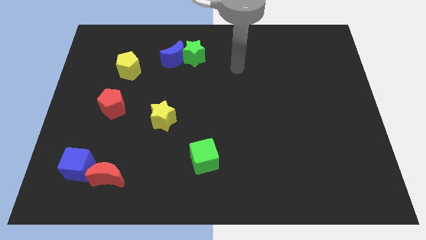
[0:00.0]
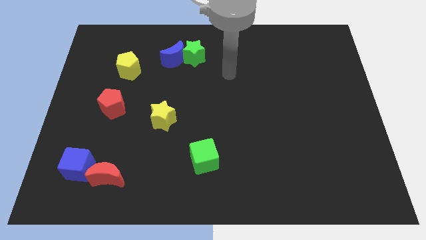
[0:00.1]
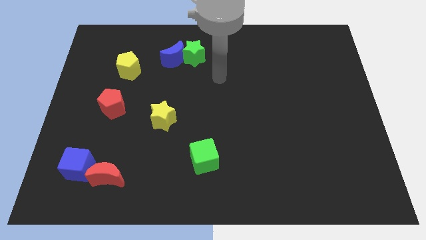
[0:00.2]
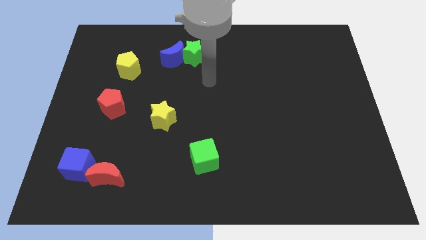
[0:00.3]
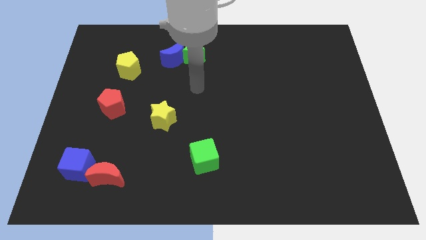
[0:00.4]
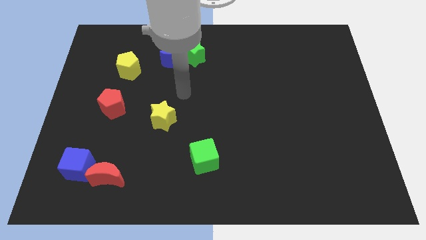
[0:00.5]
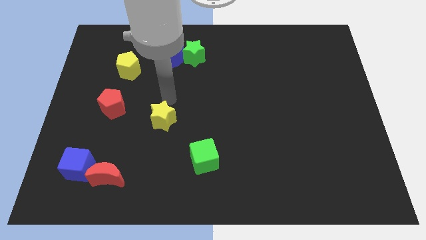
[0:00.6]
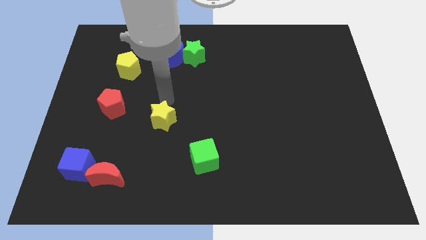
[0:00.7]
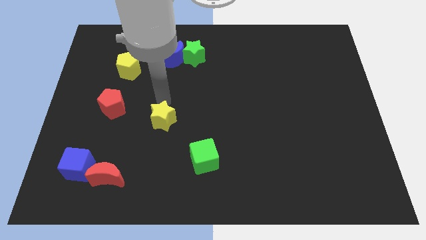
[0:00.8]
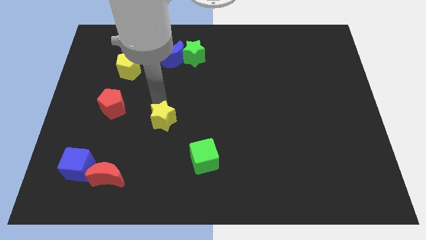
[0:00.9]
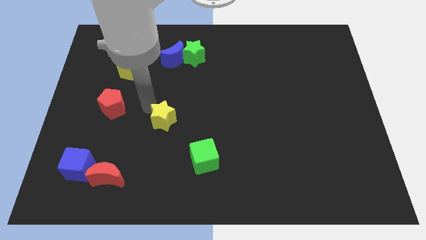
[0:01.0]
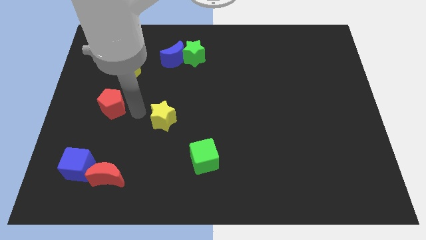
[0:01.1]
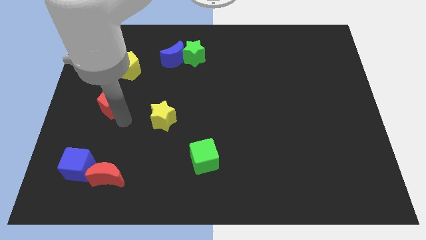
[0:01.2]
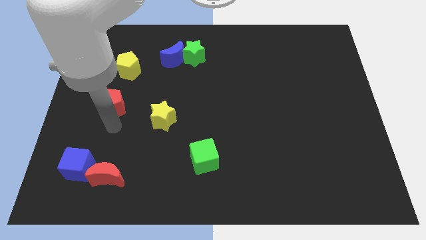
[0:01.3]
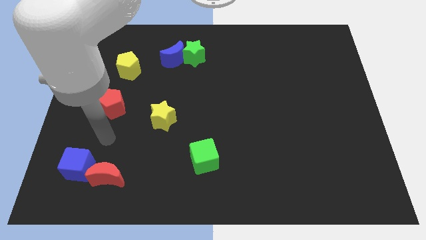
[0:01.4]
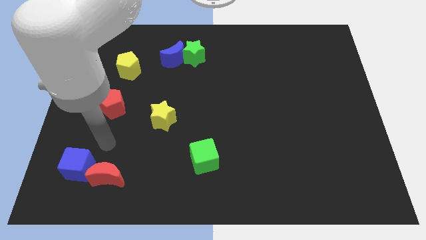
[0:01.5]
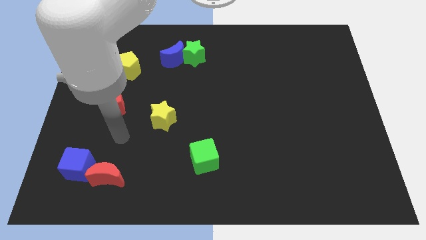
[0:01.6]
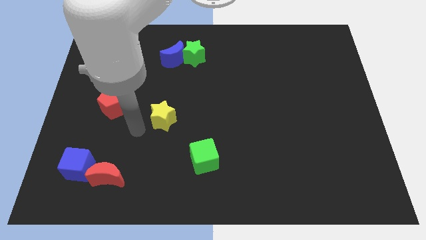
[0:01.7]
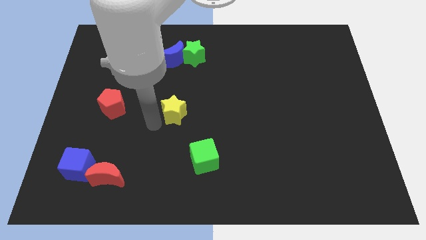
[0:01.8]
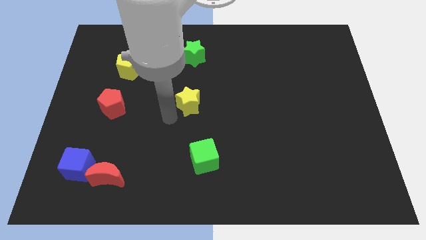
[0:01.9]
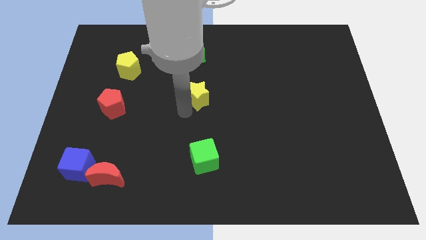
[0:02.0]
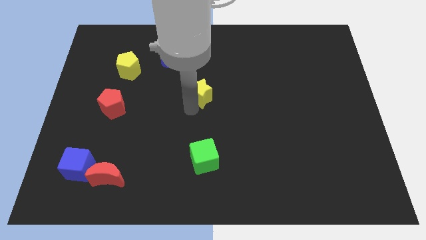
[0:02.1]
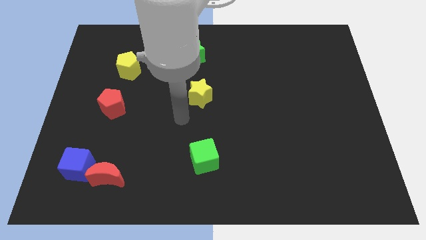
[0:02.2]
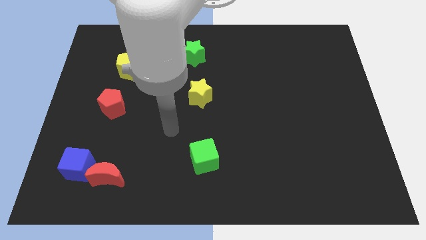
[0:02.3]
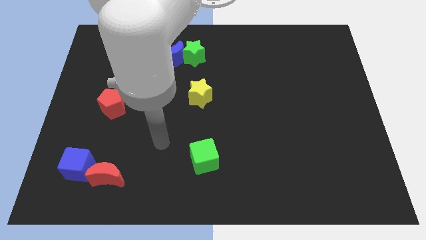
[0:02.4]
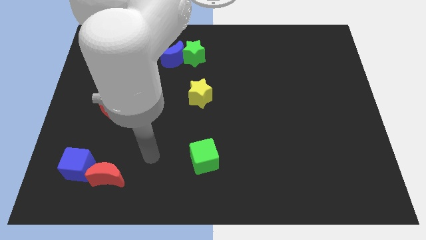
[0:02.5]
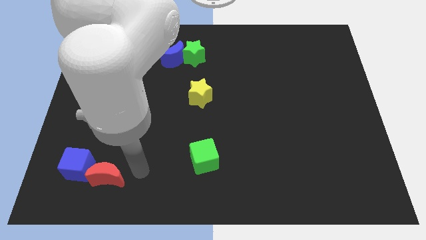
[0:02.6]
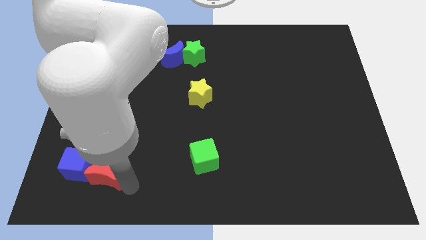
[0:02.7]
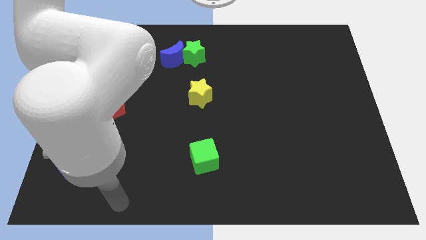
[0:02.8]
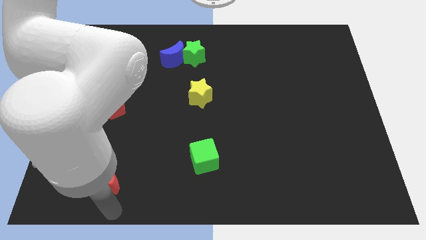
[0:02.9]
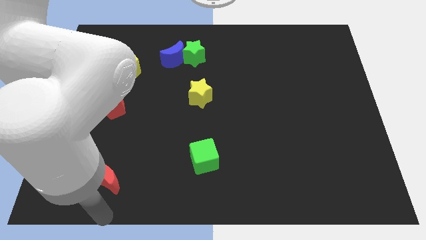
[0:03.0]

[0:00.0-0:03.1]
slide the yellow star vertically below the green star

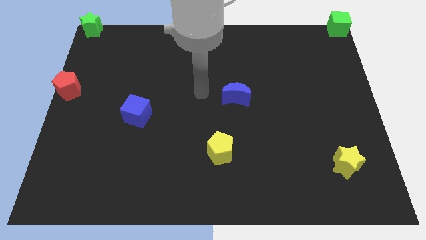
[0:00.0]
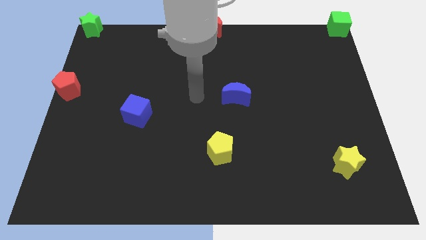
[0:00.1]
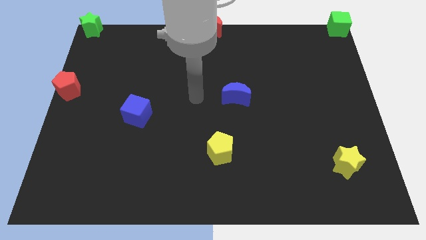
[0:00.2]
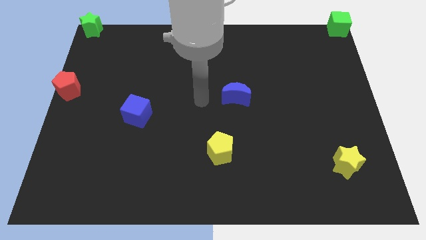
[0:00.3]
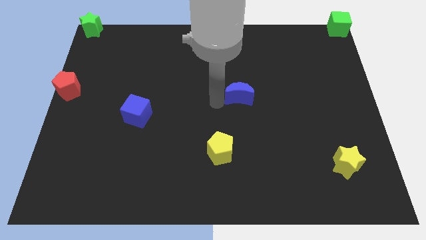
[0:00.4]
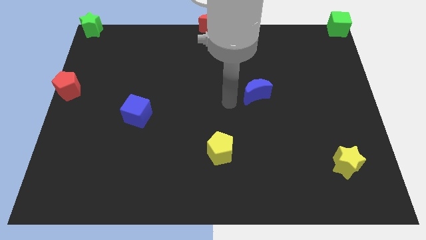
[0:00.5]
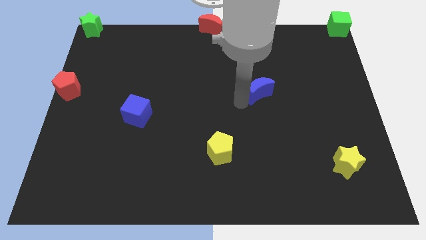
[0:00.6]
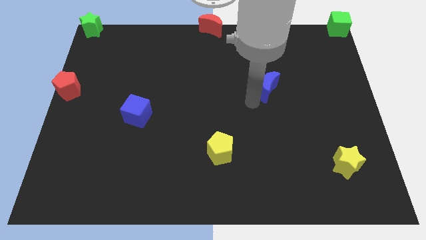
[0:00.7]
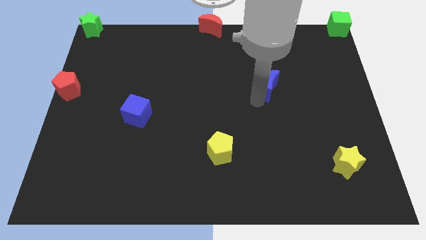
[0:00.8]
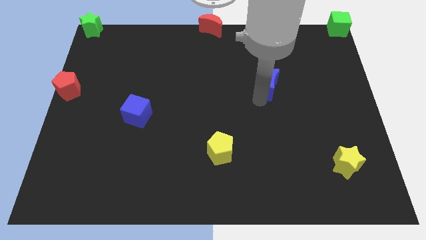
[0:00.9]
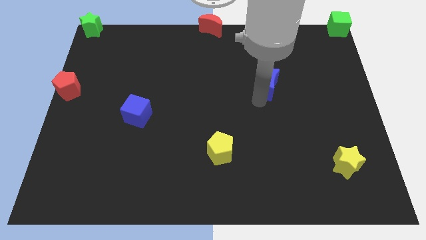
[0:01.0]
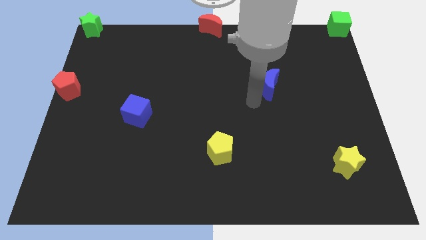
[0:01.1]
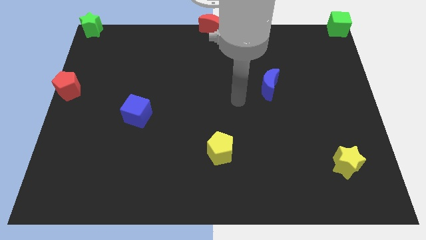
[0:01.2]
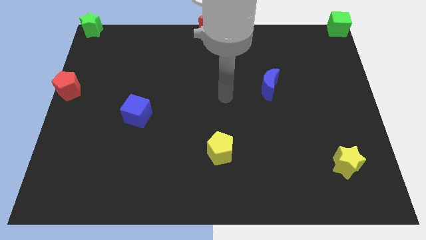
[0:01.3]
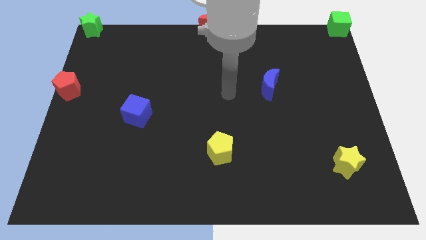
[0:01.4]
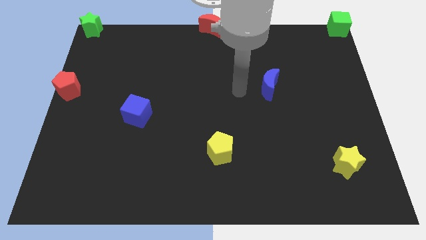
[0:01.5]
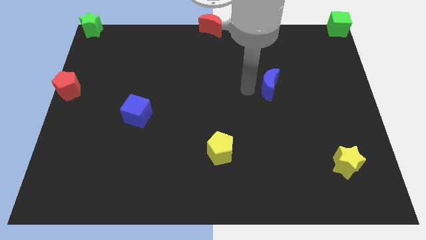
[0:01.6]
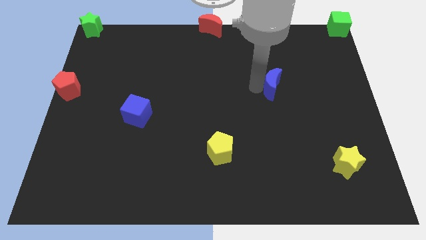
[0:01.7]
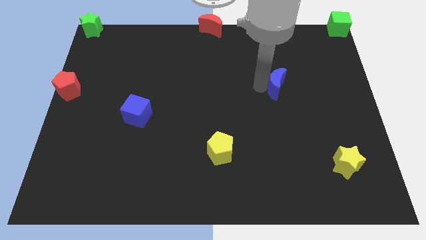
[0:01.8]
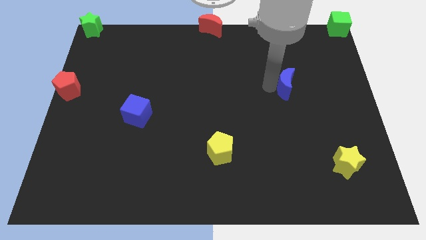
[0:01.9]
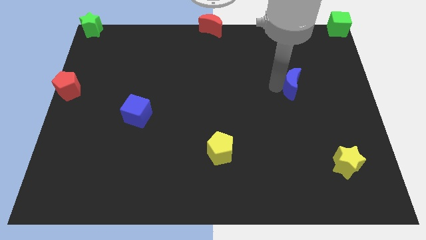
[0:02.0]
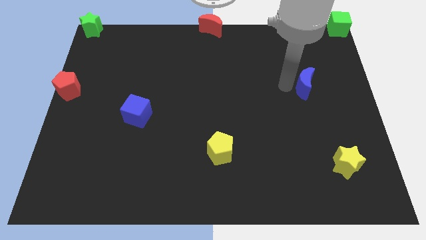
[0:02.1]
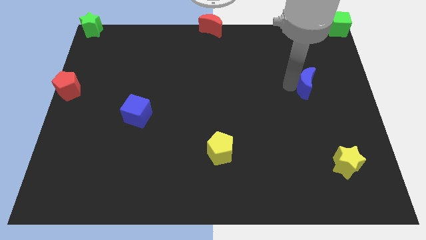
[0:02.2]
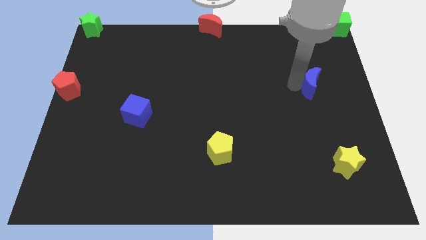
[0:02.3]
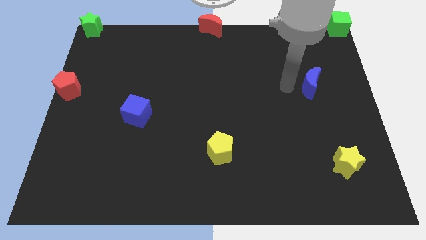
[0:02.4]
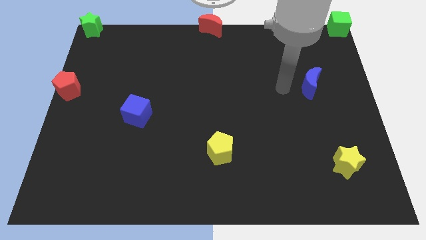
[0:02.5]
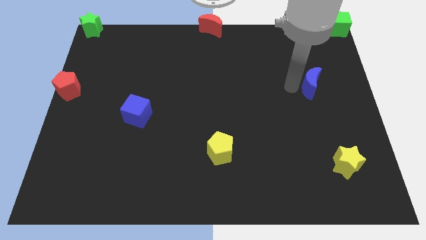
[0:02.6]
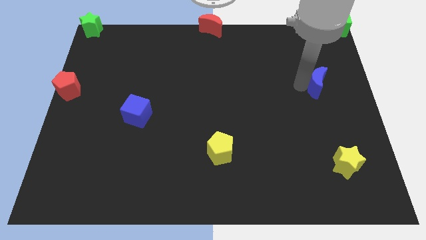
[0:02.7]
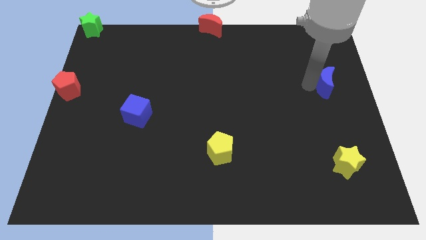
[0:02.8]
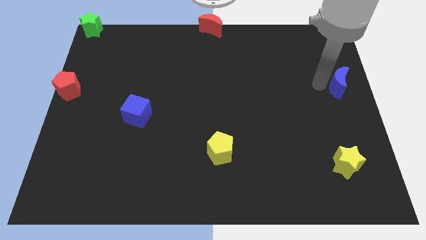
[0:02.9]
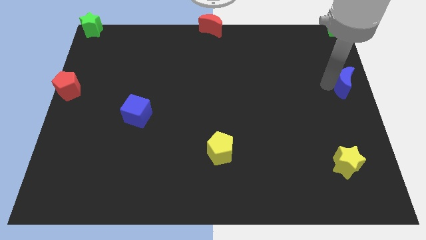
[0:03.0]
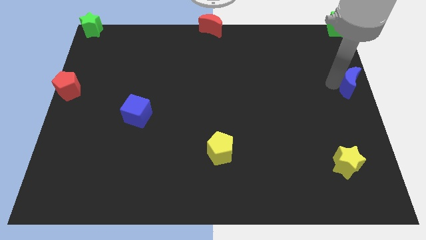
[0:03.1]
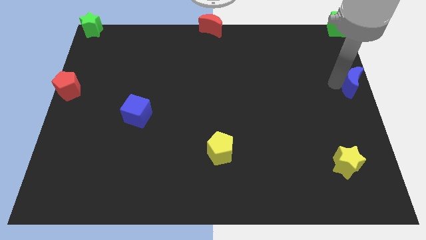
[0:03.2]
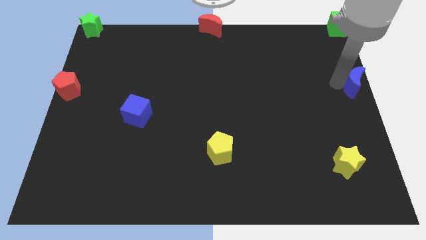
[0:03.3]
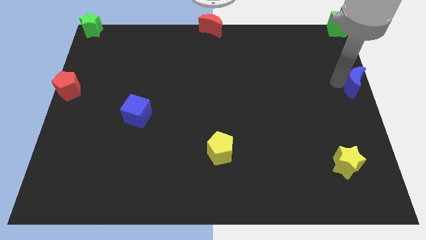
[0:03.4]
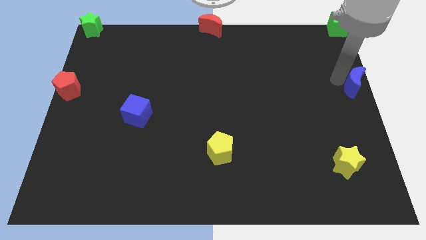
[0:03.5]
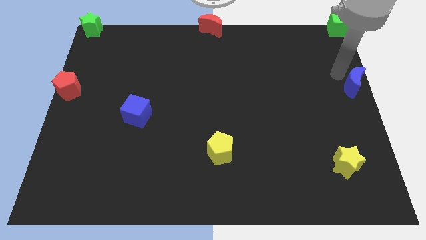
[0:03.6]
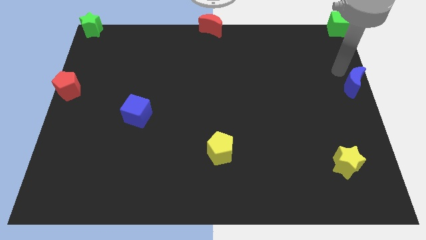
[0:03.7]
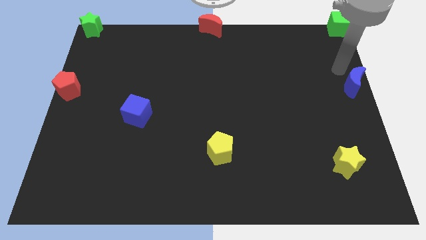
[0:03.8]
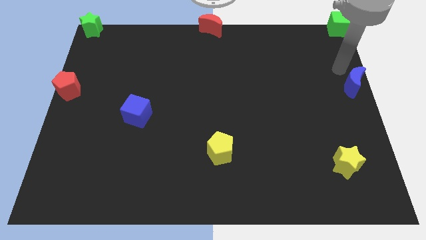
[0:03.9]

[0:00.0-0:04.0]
push the blue crescent to the center right of the board

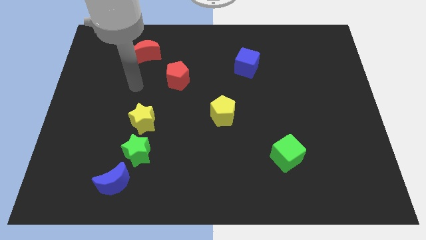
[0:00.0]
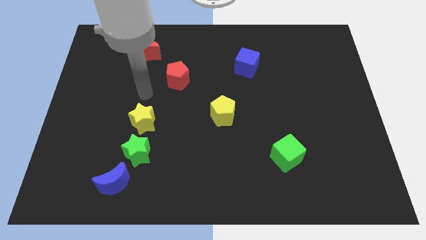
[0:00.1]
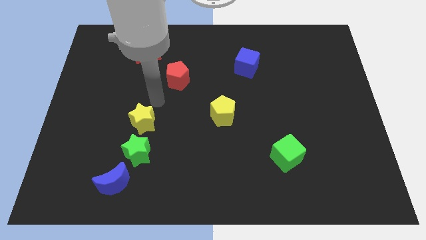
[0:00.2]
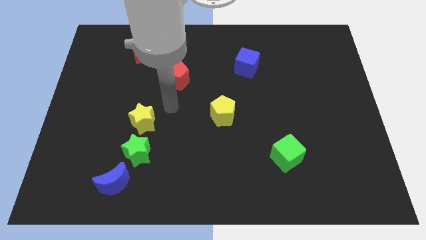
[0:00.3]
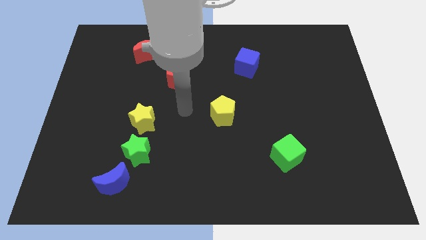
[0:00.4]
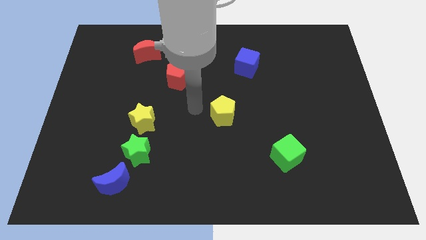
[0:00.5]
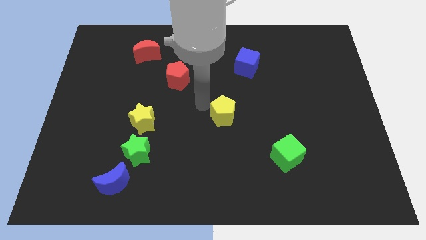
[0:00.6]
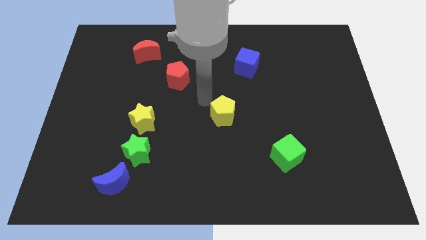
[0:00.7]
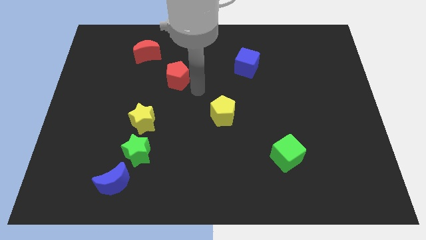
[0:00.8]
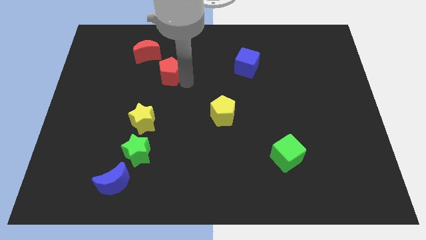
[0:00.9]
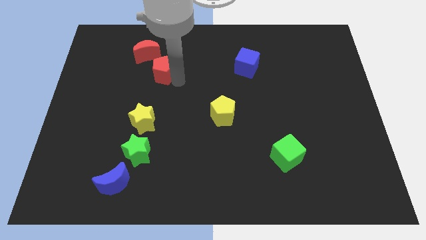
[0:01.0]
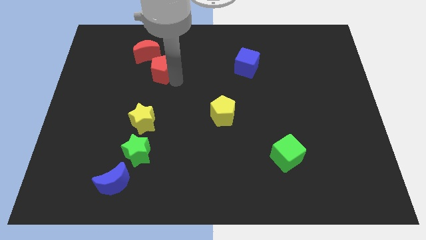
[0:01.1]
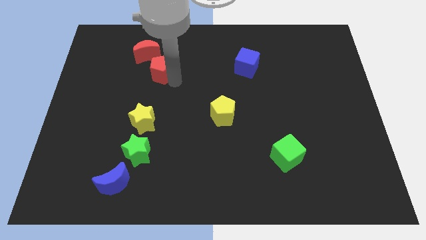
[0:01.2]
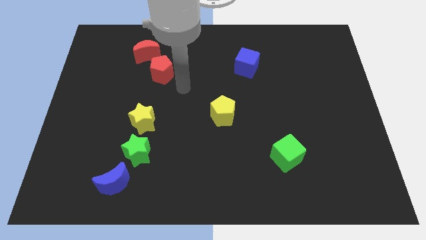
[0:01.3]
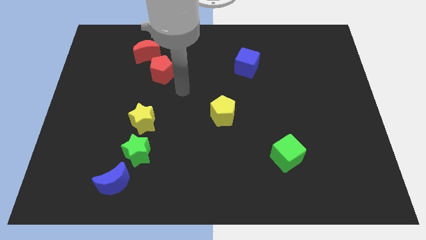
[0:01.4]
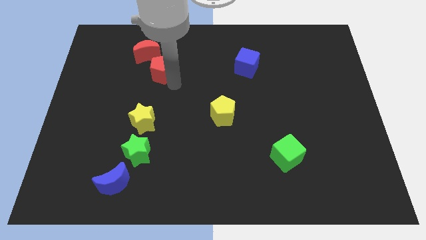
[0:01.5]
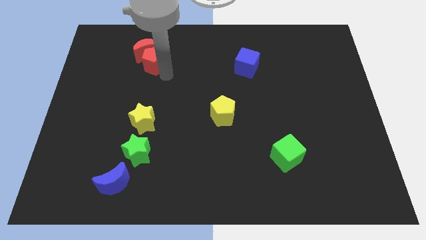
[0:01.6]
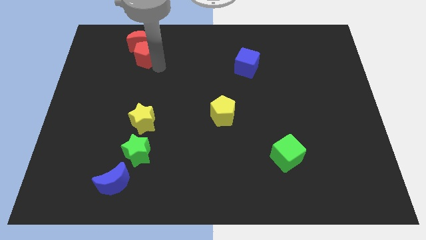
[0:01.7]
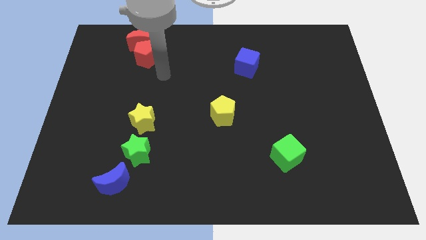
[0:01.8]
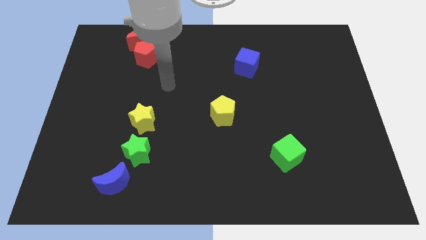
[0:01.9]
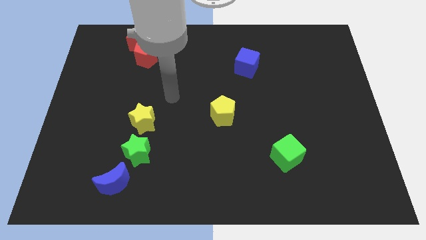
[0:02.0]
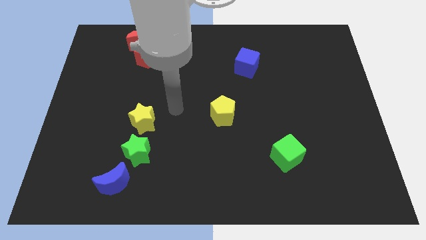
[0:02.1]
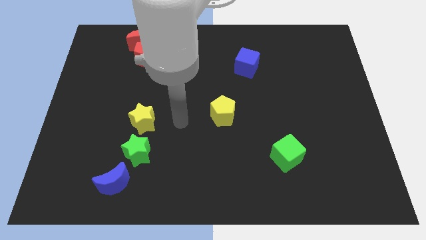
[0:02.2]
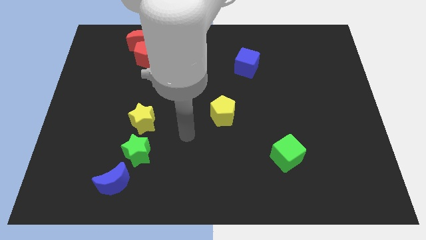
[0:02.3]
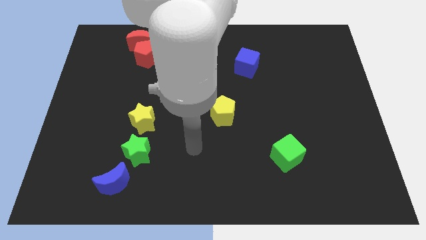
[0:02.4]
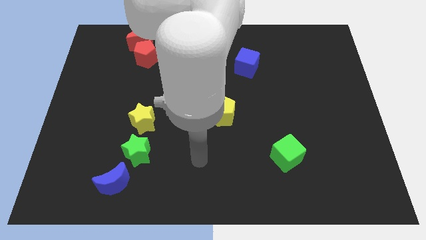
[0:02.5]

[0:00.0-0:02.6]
move the red pentagon into the red crescent
